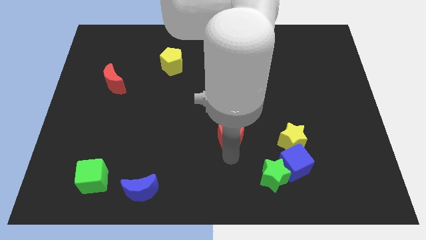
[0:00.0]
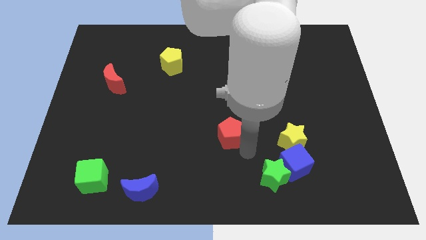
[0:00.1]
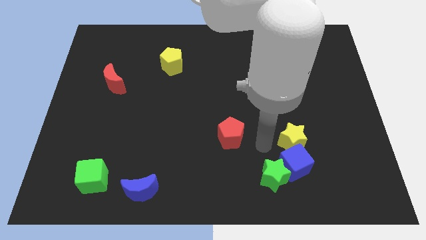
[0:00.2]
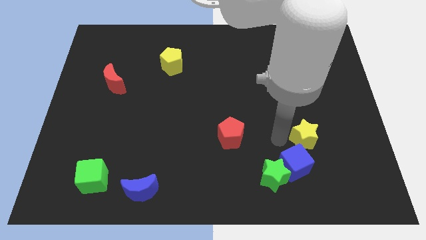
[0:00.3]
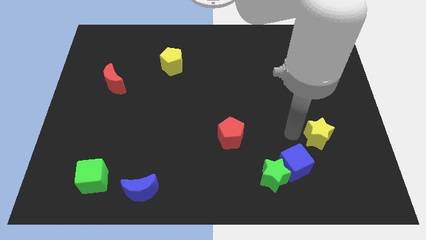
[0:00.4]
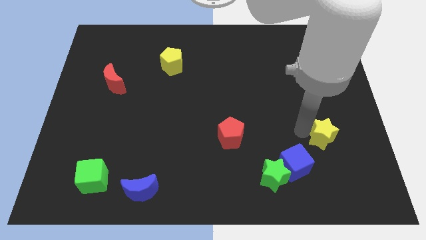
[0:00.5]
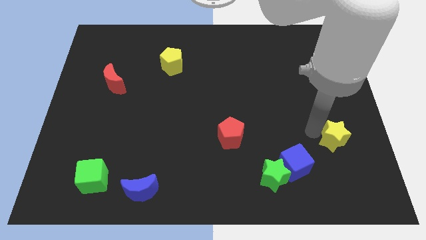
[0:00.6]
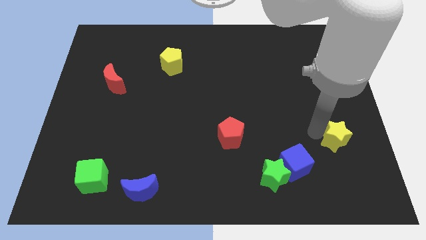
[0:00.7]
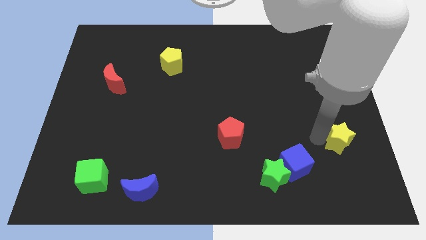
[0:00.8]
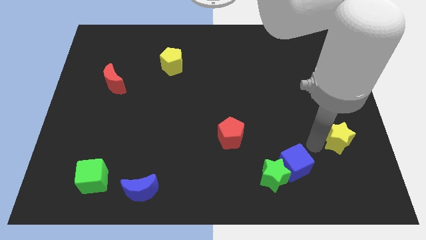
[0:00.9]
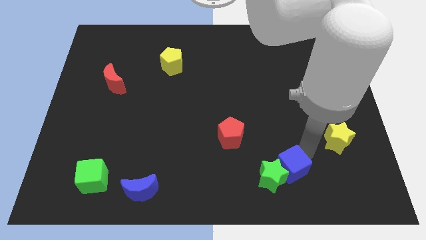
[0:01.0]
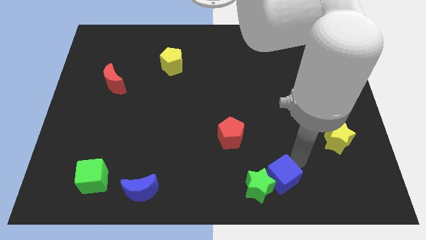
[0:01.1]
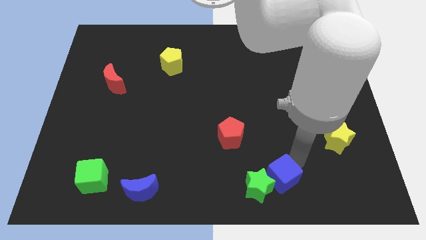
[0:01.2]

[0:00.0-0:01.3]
separate the yellow star from the blue cube

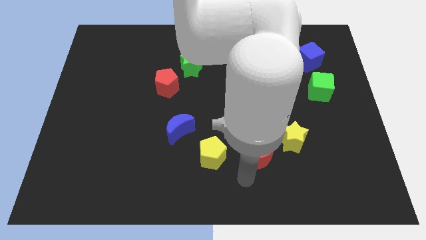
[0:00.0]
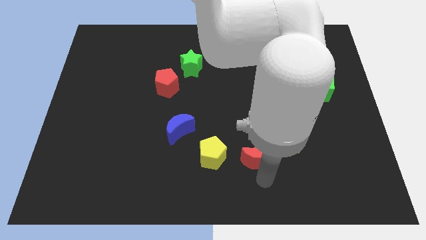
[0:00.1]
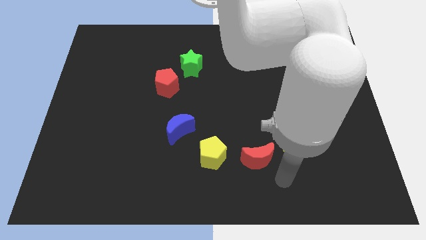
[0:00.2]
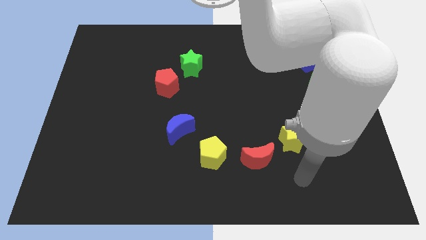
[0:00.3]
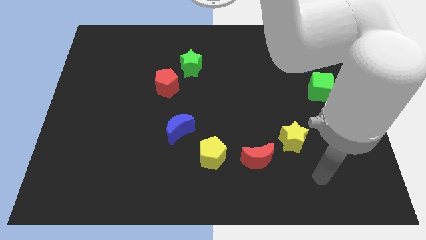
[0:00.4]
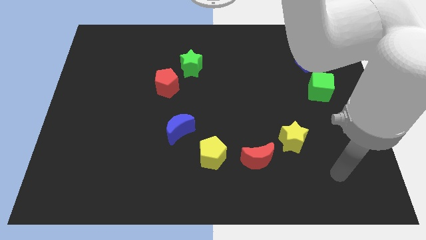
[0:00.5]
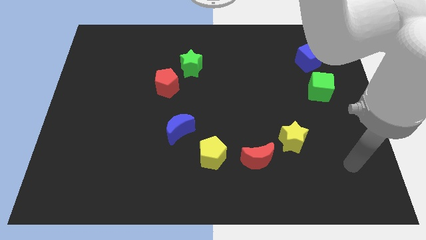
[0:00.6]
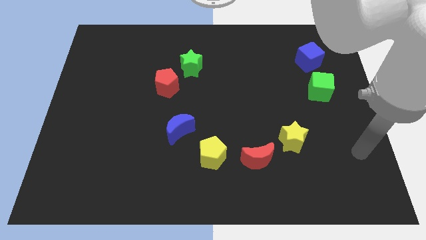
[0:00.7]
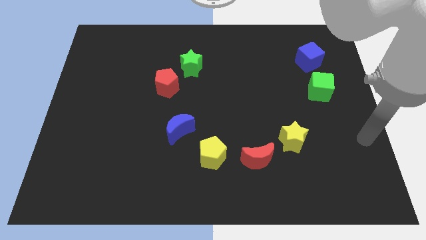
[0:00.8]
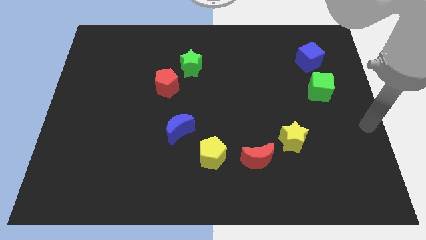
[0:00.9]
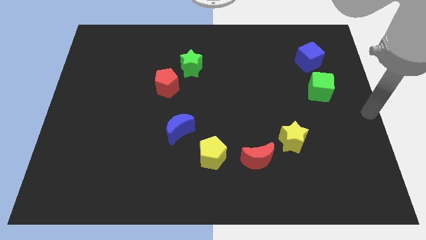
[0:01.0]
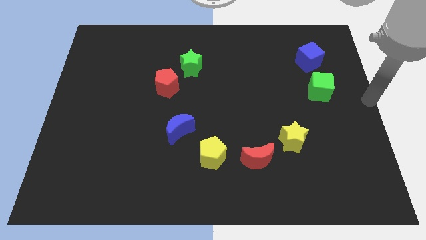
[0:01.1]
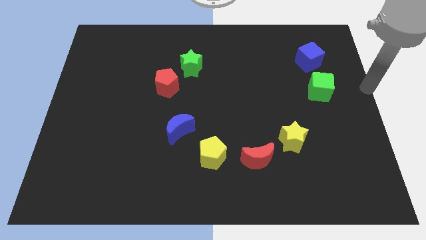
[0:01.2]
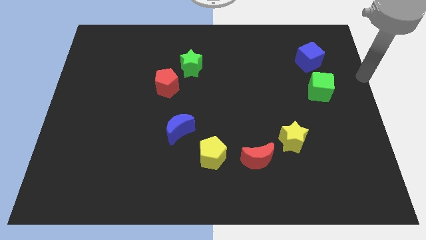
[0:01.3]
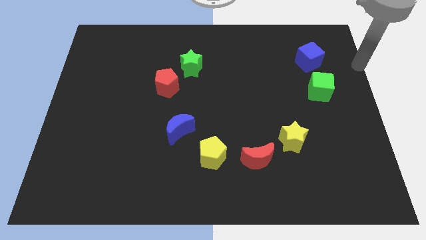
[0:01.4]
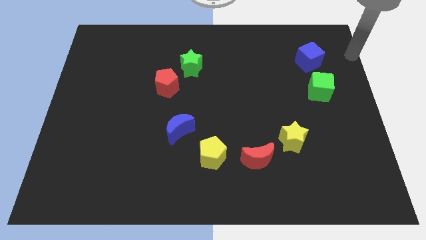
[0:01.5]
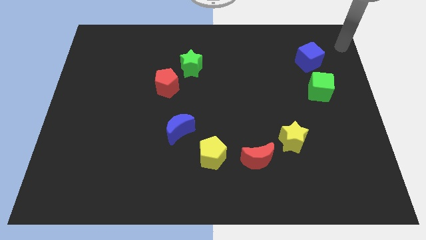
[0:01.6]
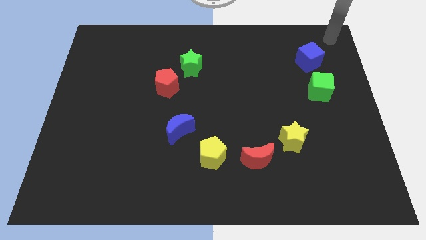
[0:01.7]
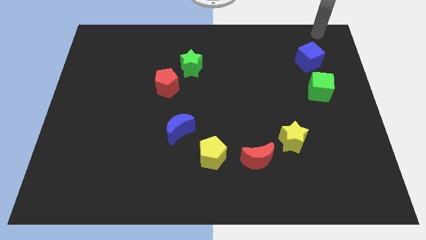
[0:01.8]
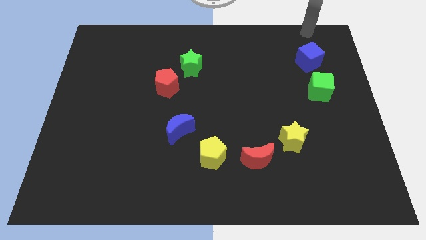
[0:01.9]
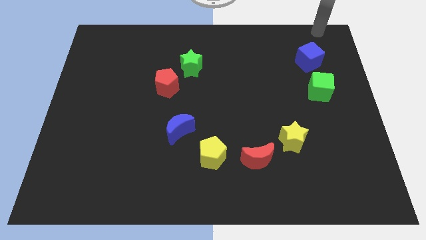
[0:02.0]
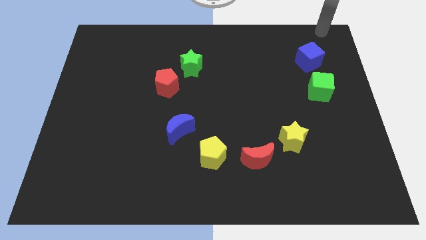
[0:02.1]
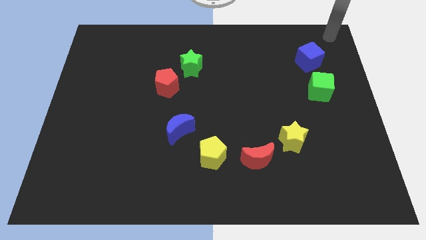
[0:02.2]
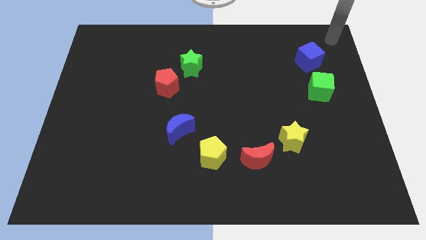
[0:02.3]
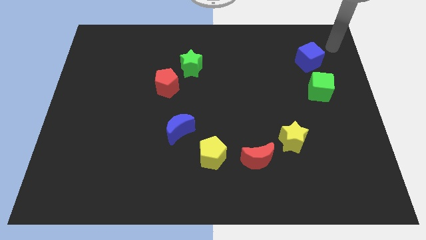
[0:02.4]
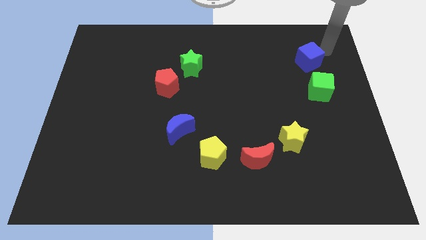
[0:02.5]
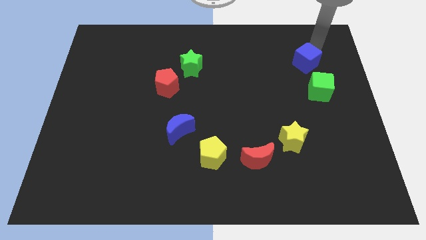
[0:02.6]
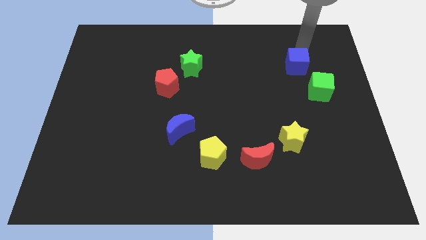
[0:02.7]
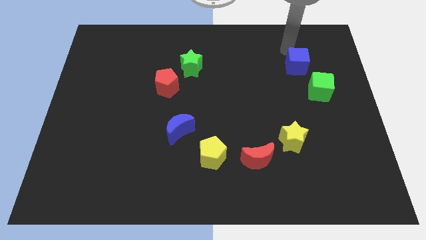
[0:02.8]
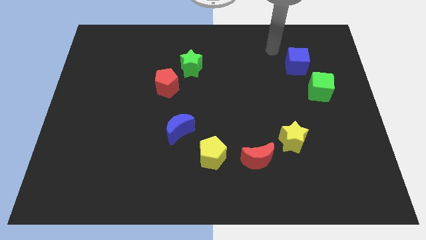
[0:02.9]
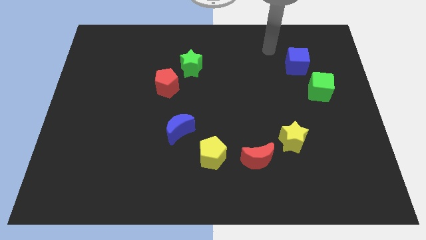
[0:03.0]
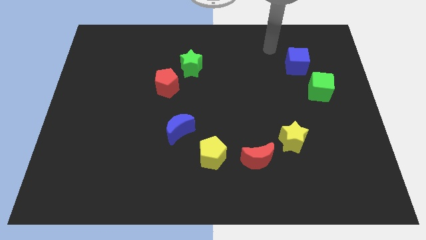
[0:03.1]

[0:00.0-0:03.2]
place the blue cube to the top left of the green cube

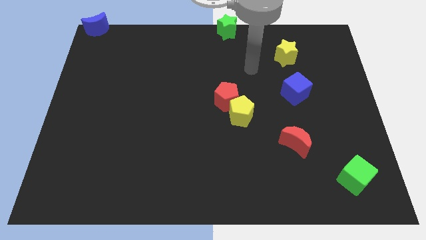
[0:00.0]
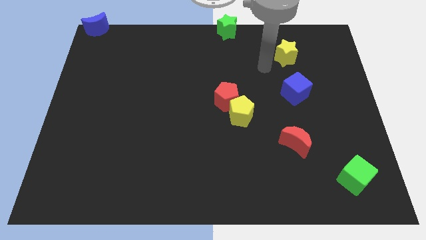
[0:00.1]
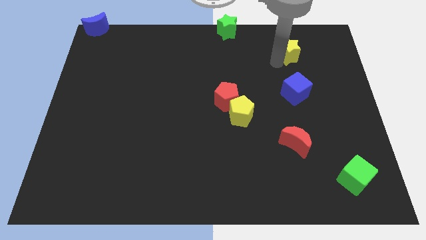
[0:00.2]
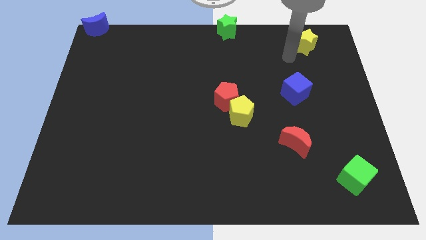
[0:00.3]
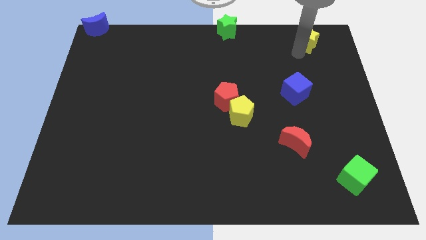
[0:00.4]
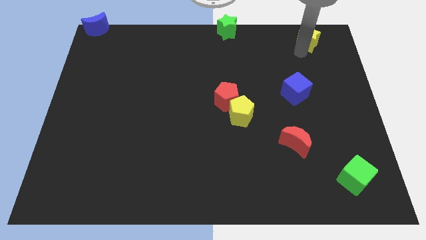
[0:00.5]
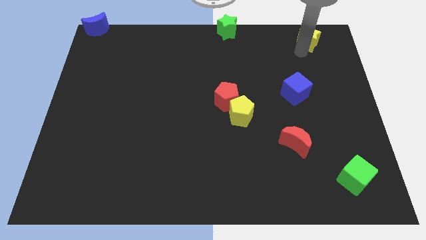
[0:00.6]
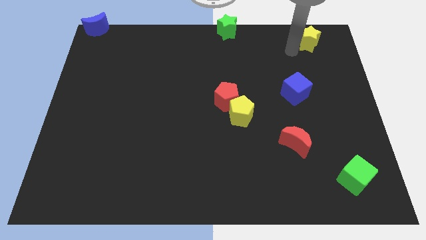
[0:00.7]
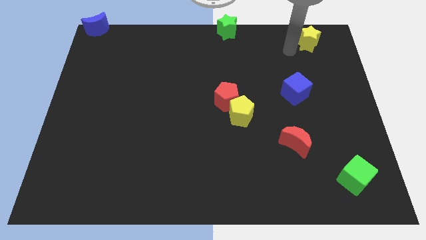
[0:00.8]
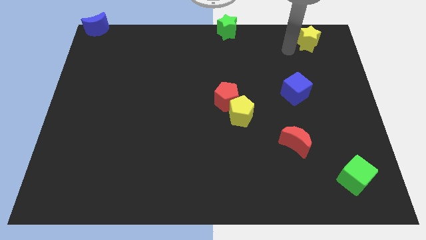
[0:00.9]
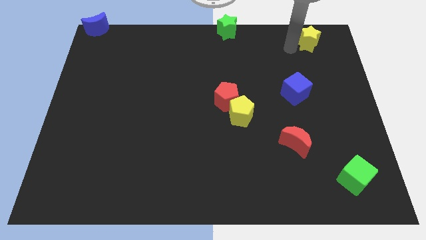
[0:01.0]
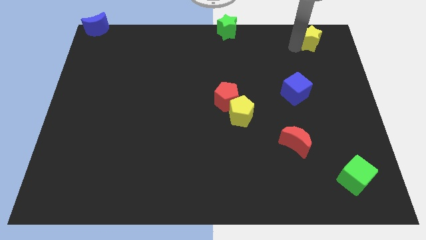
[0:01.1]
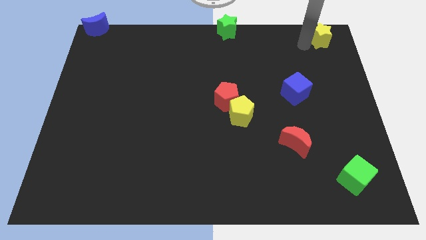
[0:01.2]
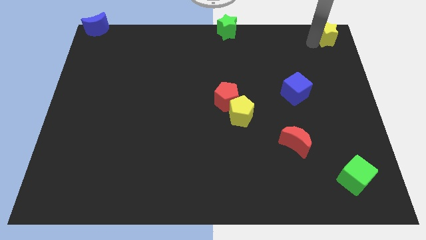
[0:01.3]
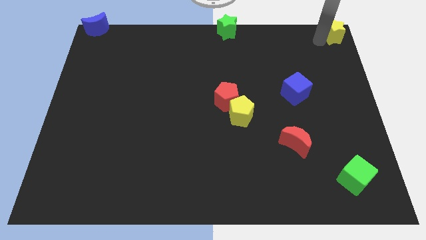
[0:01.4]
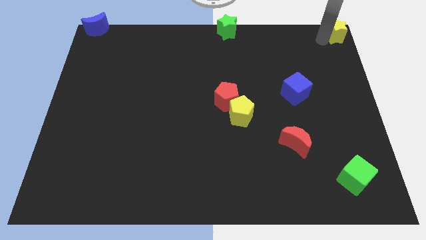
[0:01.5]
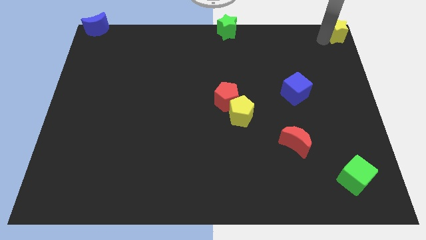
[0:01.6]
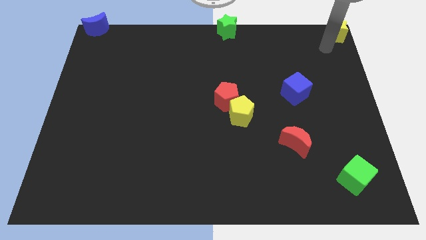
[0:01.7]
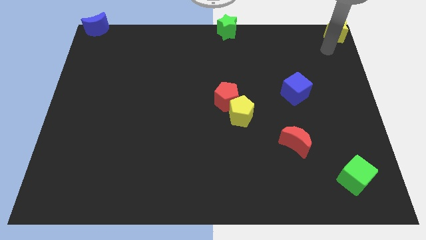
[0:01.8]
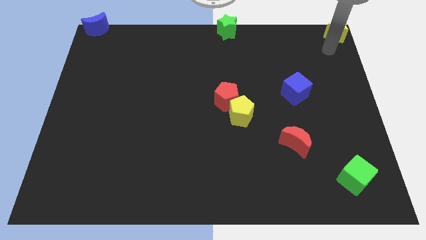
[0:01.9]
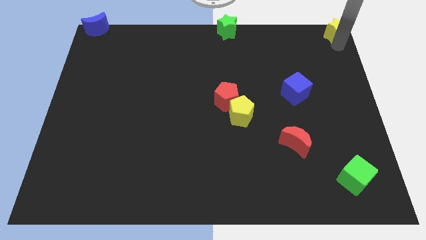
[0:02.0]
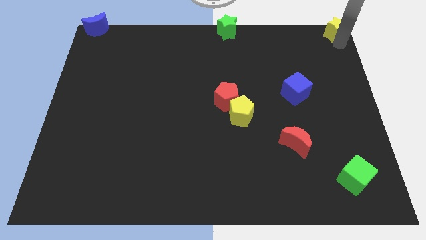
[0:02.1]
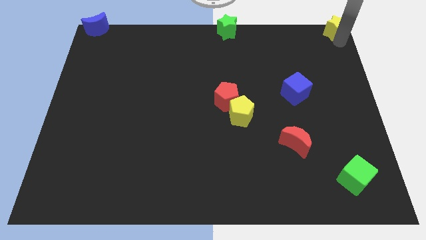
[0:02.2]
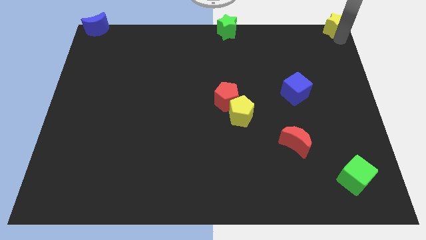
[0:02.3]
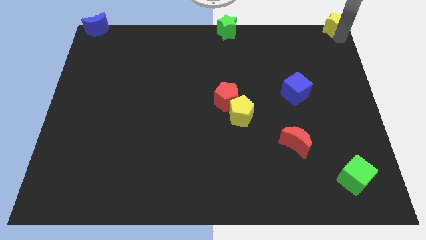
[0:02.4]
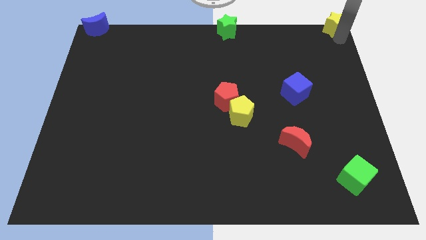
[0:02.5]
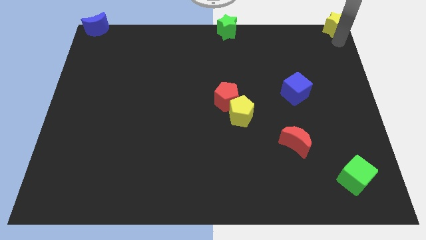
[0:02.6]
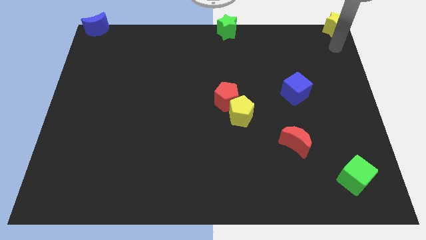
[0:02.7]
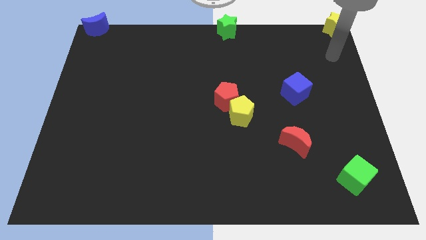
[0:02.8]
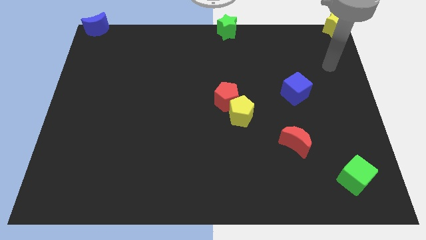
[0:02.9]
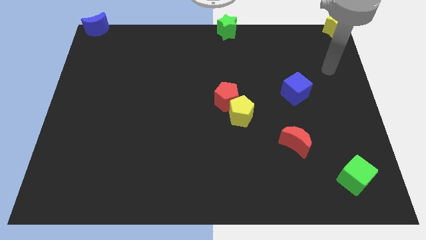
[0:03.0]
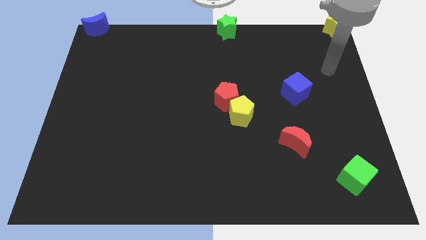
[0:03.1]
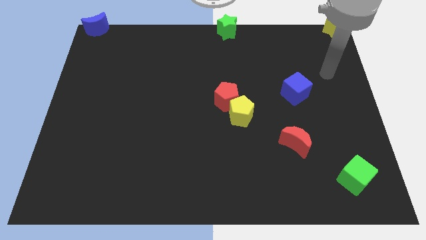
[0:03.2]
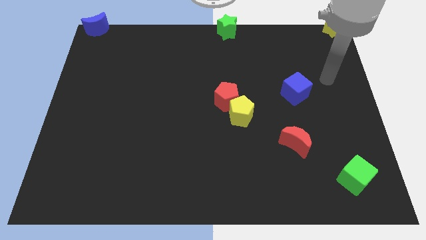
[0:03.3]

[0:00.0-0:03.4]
push the yellow star to the top right corner of the board

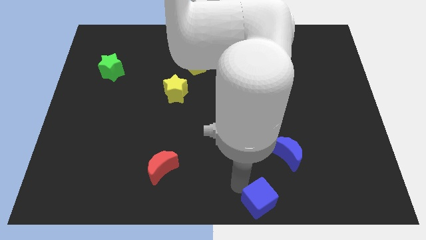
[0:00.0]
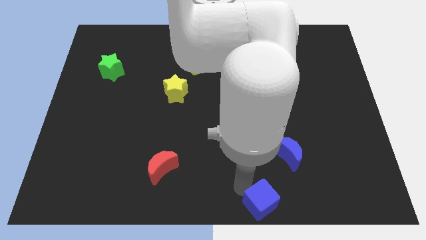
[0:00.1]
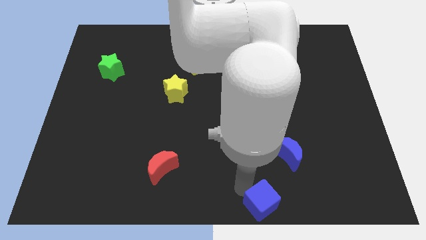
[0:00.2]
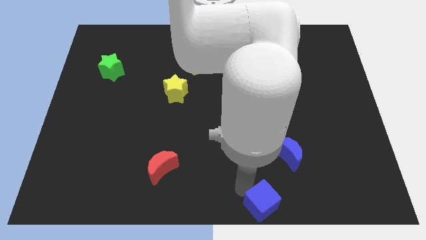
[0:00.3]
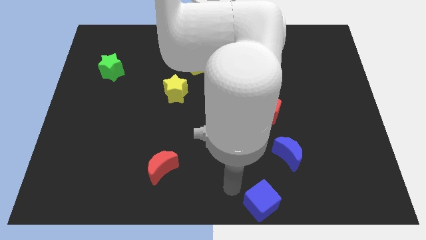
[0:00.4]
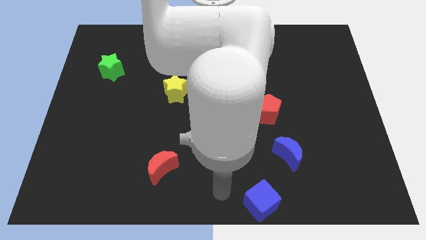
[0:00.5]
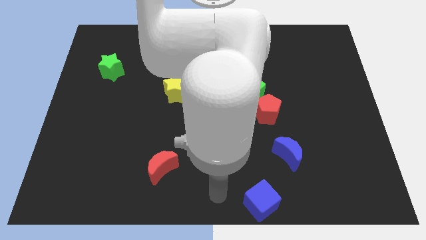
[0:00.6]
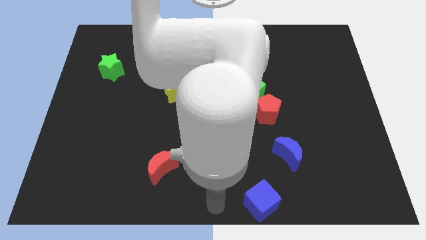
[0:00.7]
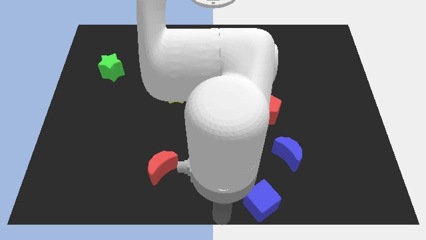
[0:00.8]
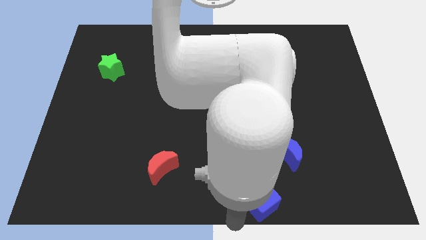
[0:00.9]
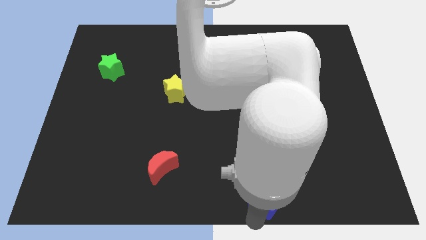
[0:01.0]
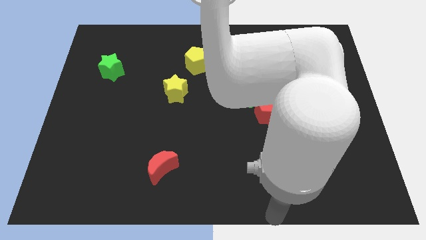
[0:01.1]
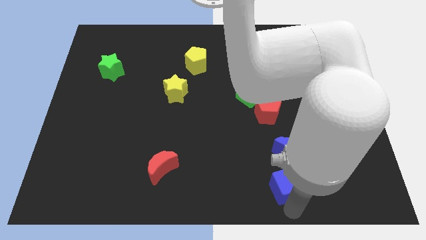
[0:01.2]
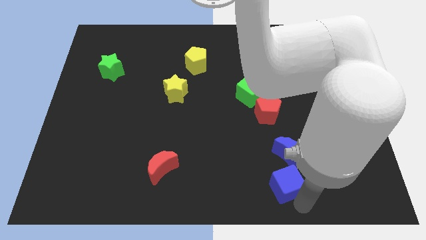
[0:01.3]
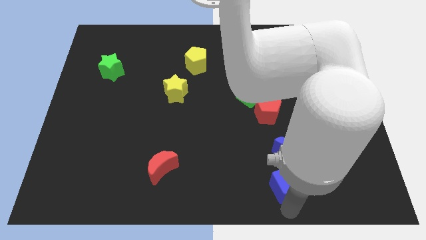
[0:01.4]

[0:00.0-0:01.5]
place the blue cube below the blue crescent
